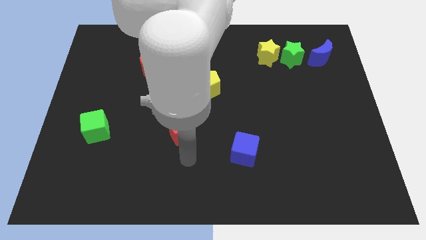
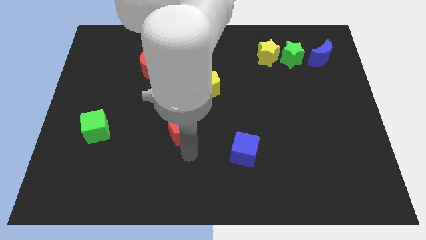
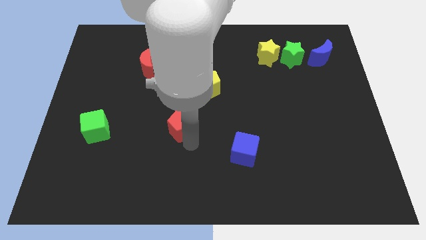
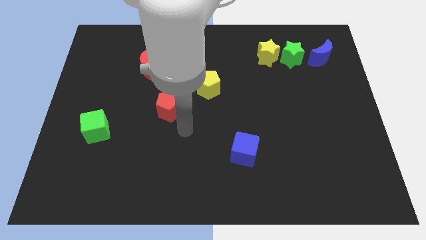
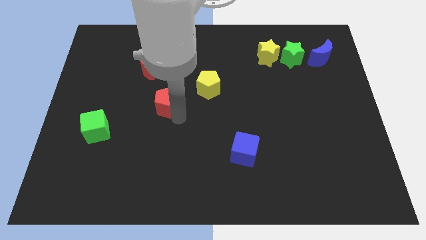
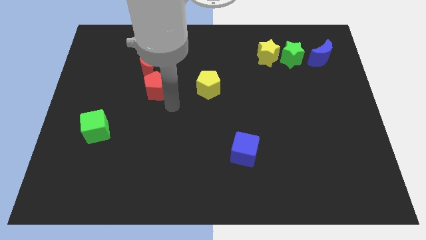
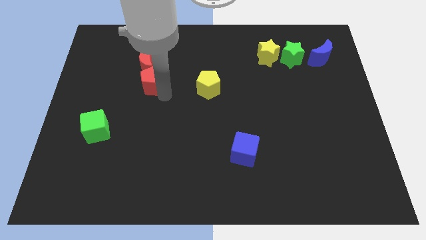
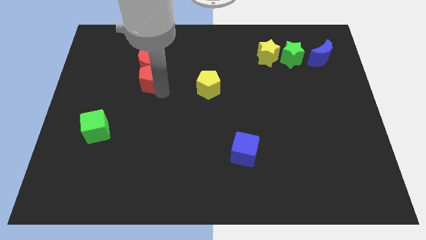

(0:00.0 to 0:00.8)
place red pentagon to the left of yellow pentagon

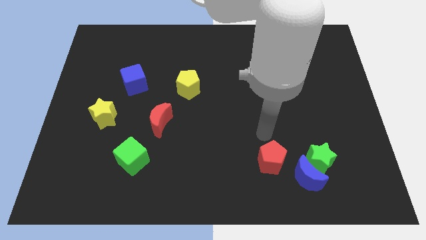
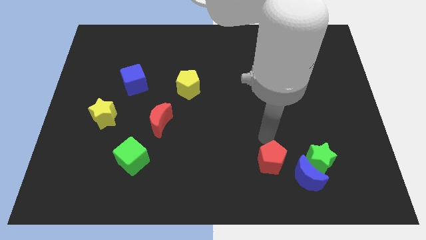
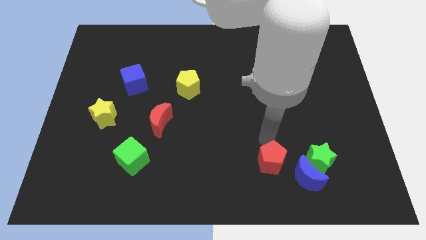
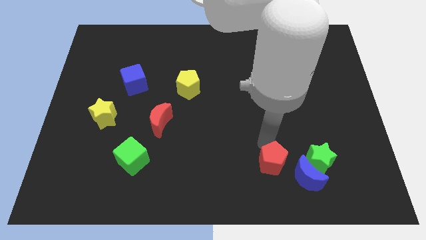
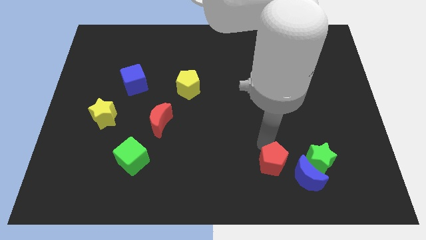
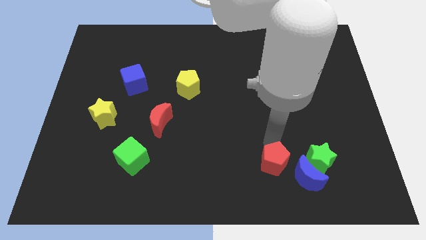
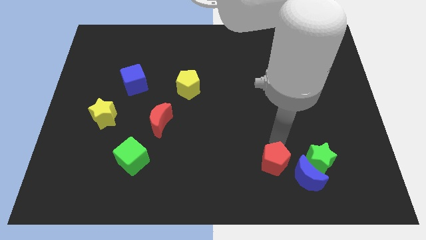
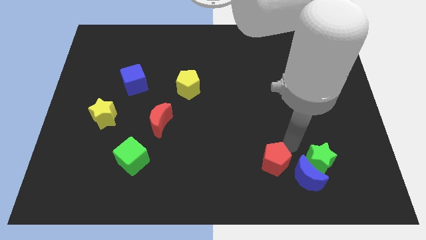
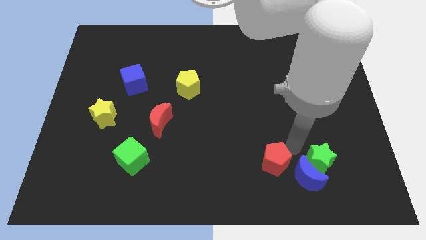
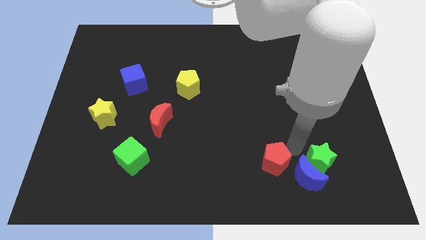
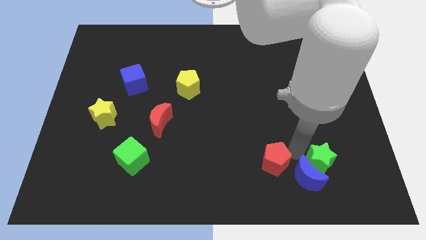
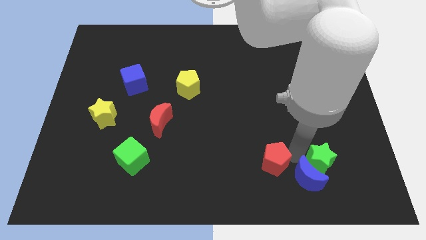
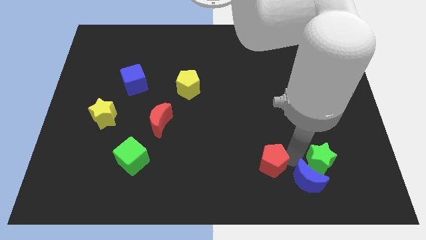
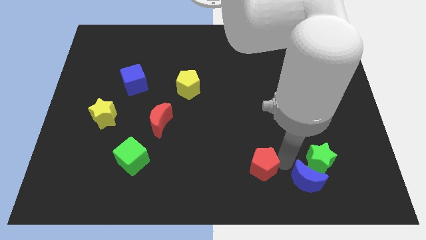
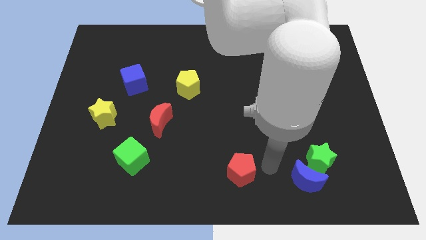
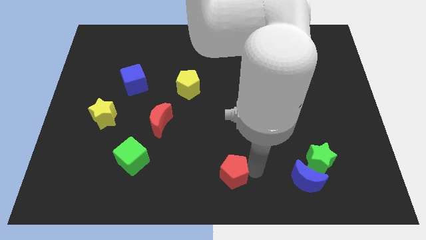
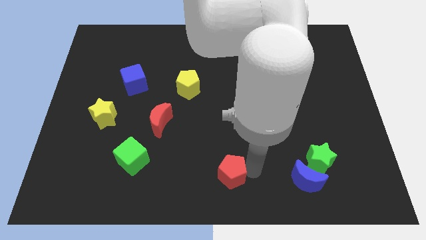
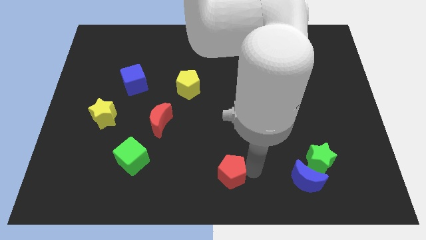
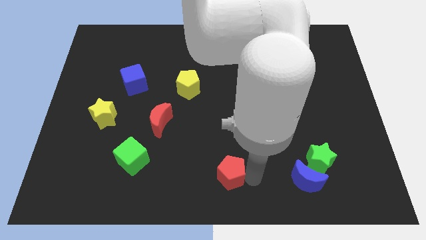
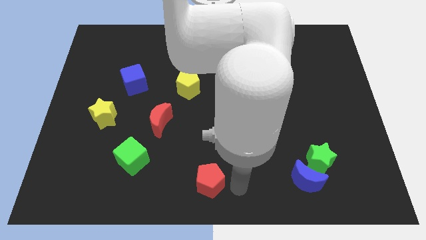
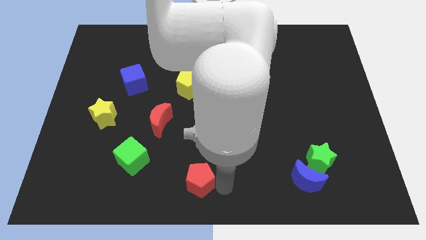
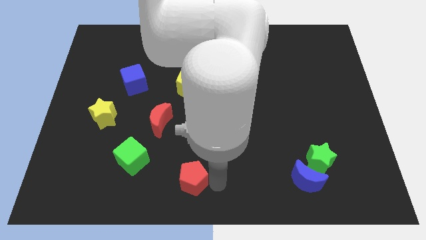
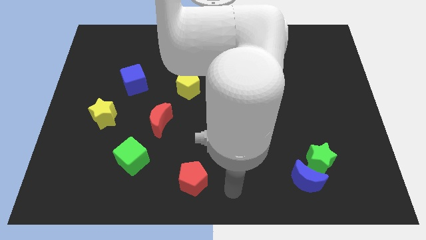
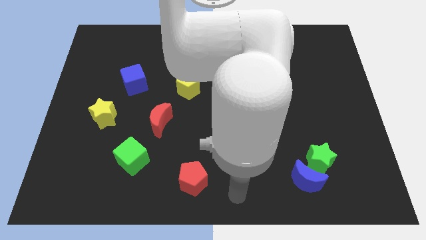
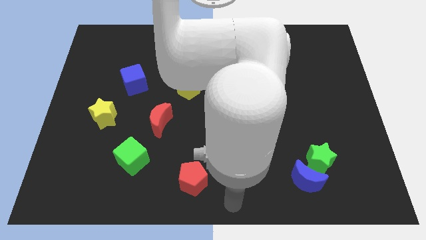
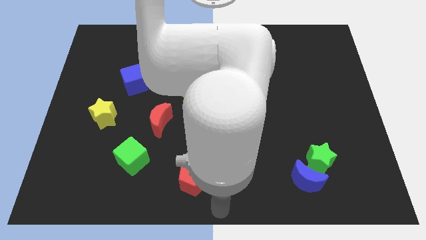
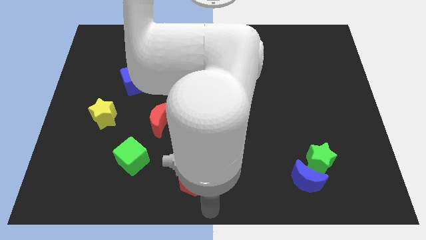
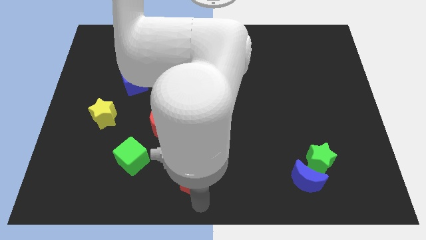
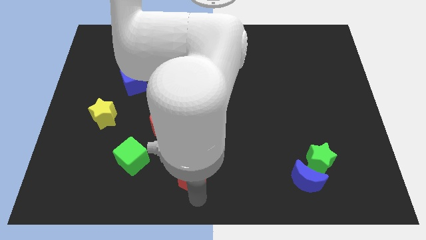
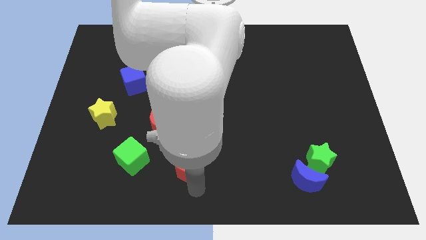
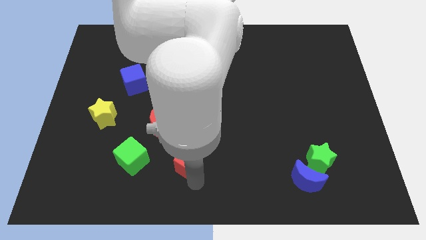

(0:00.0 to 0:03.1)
move red pentagon towards green cube

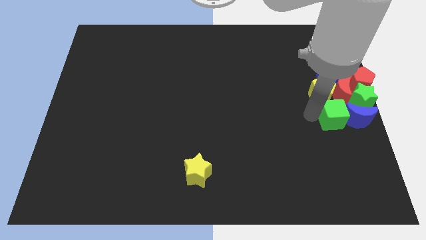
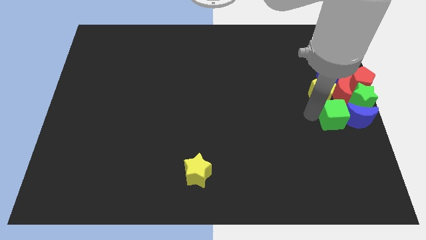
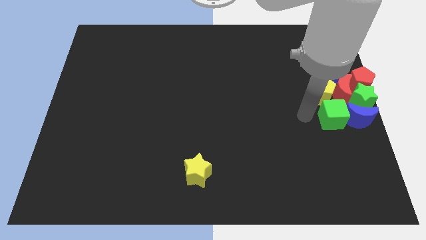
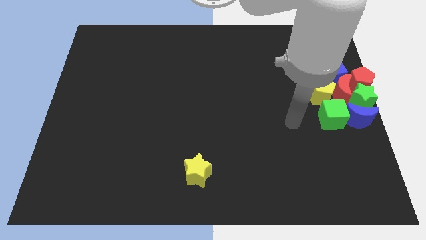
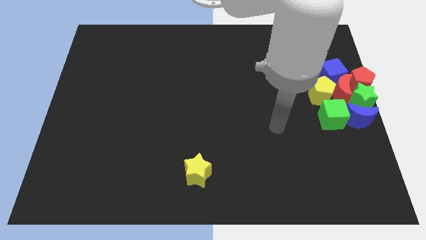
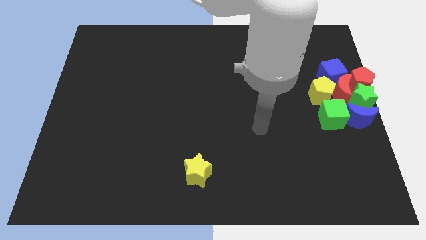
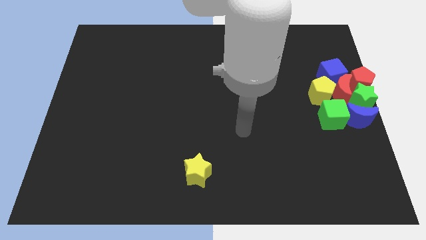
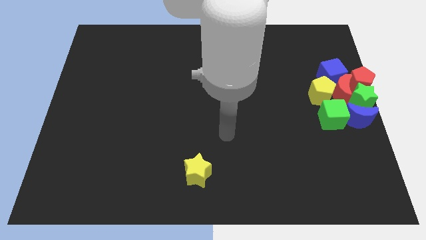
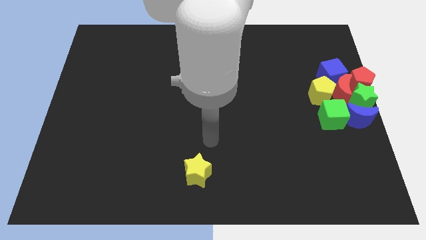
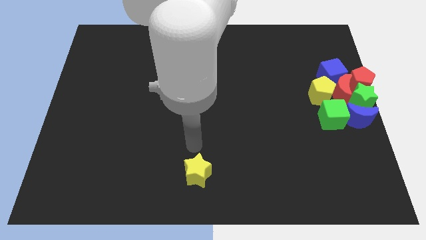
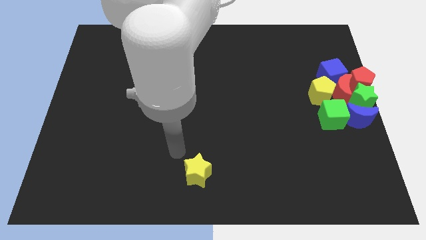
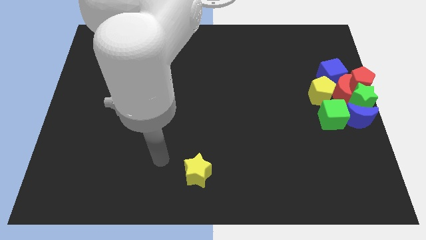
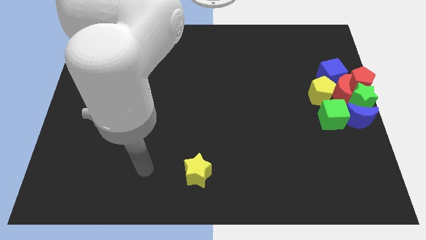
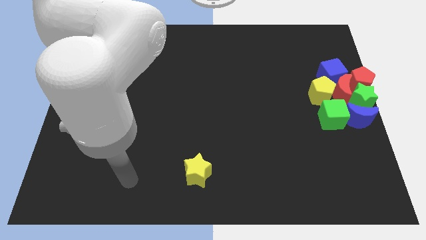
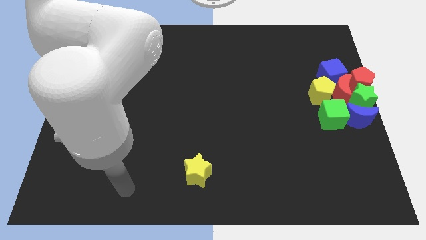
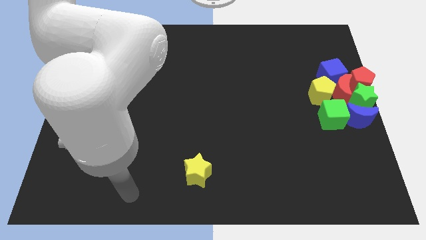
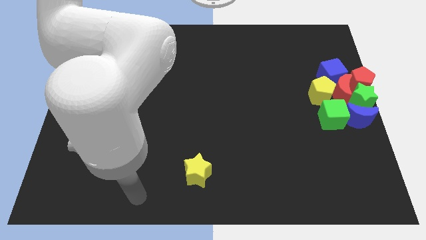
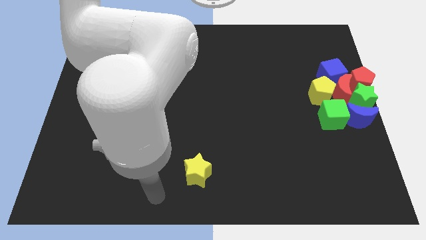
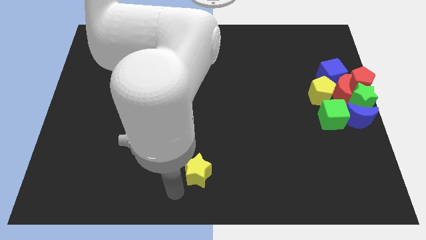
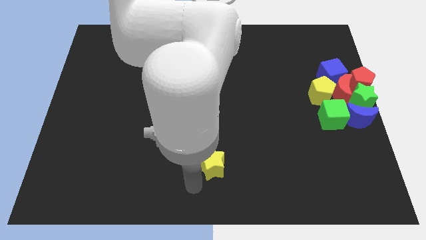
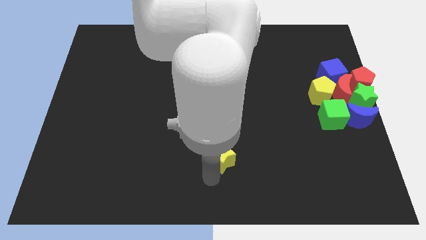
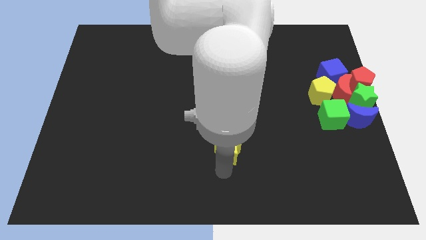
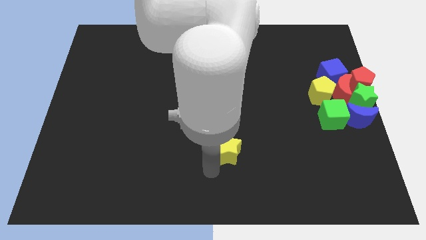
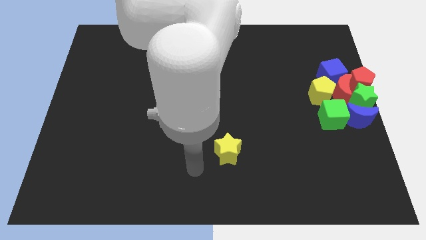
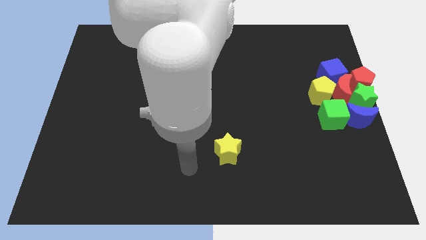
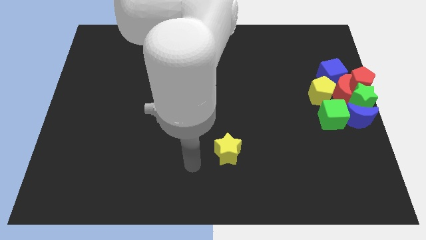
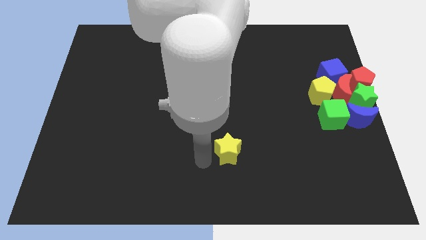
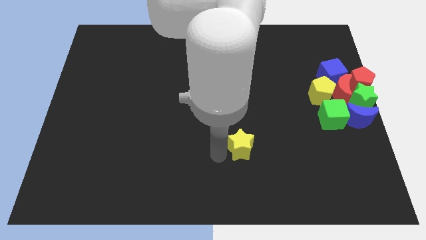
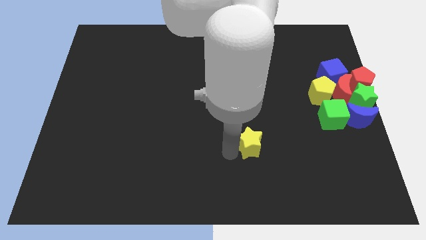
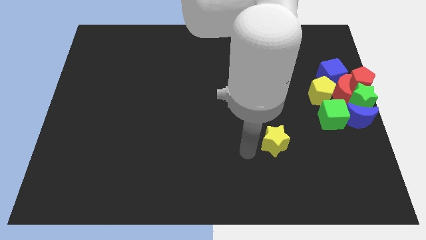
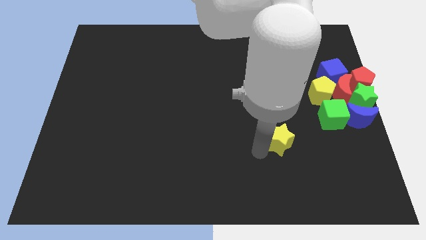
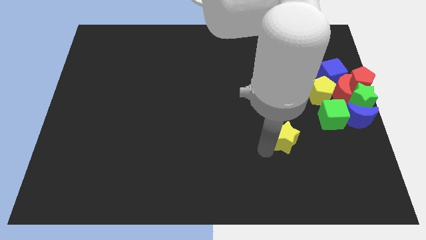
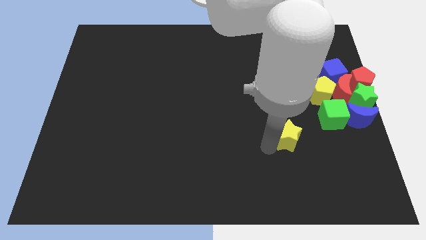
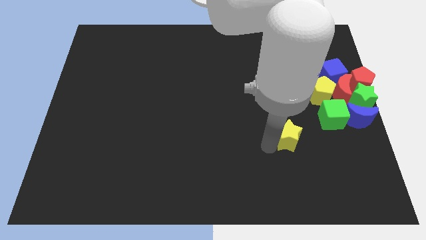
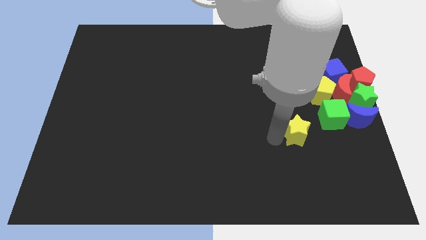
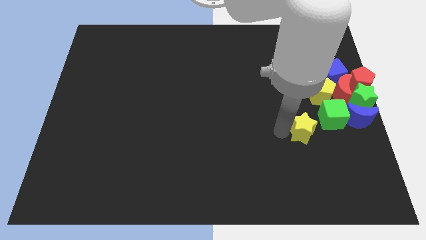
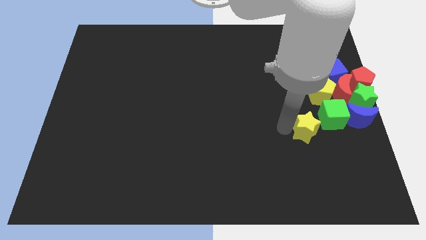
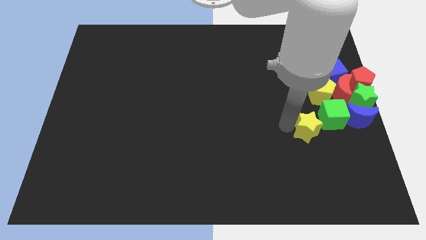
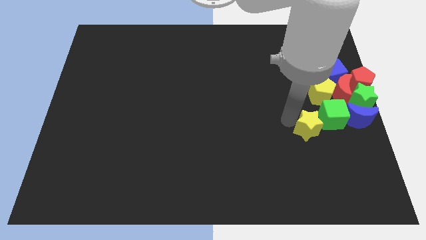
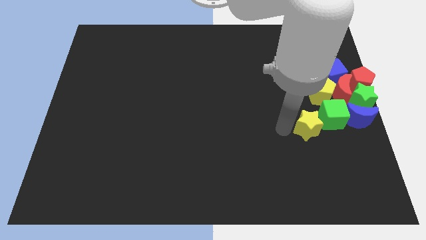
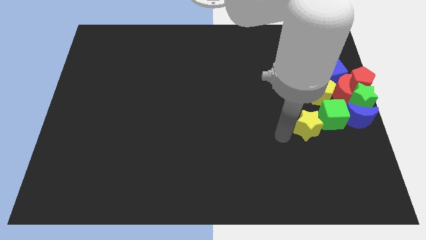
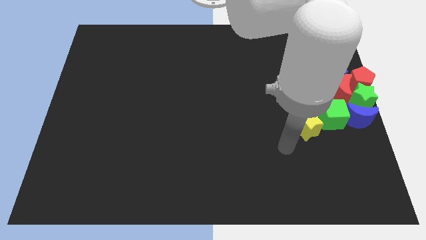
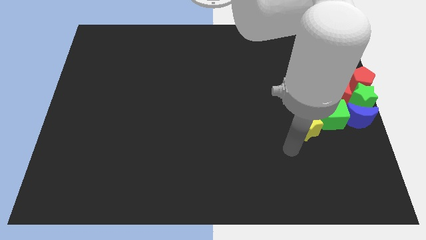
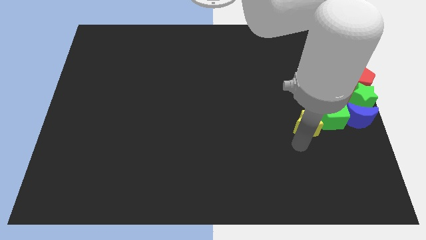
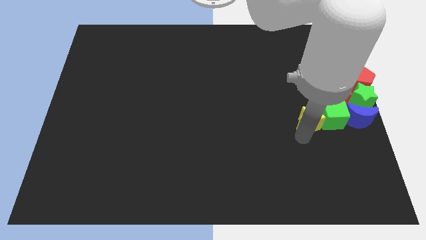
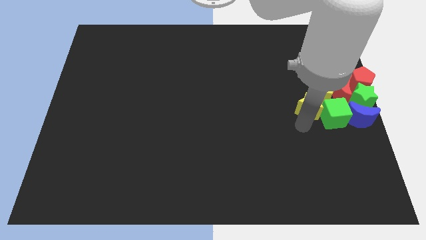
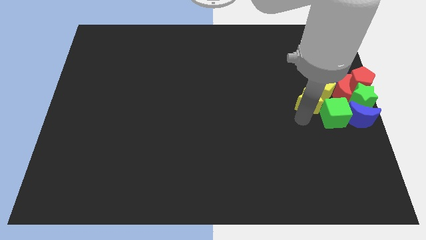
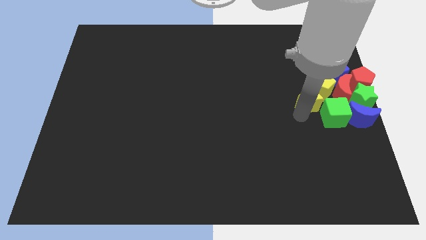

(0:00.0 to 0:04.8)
drag the yellow star into the group of blocks

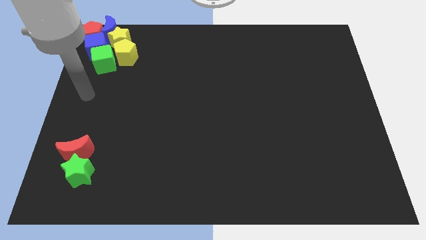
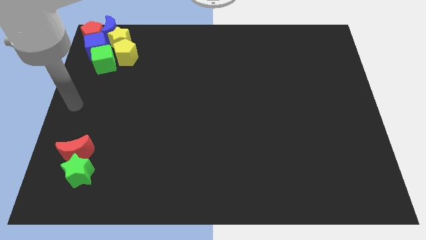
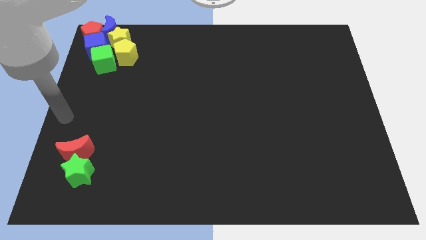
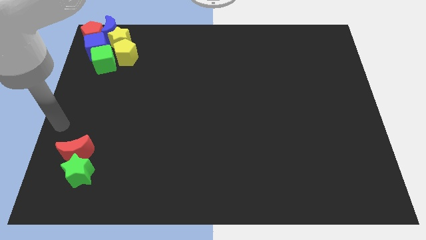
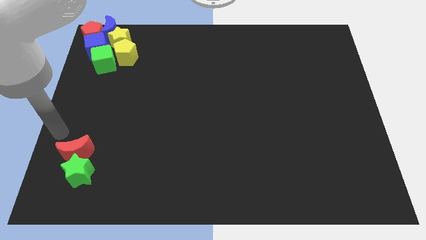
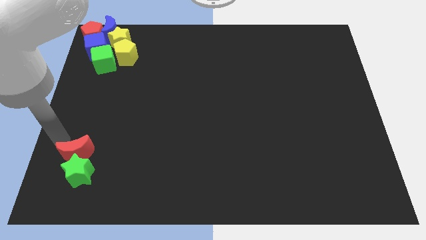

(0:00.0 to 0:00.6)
move your arm to the left center of the board
